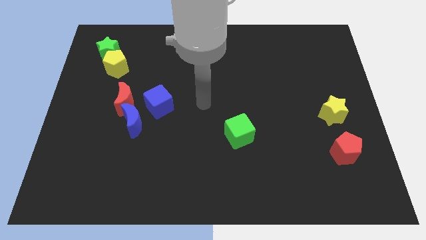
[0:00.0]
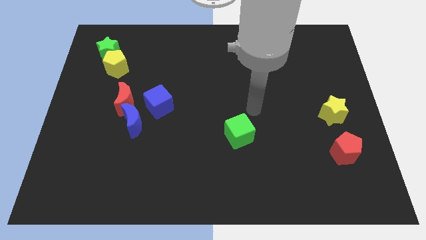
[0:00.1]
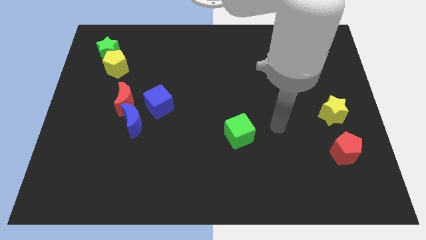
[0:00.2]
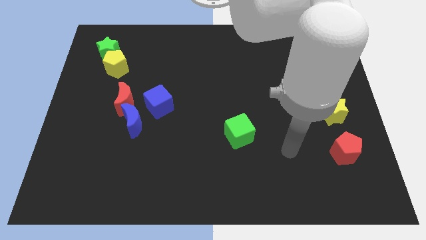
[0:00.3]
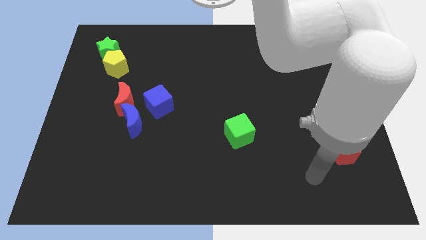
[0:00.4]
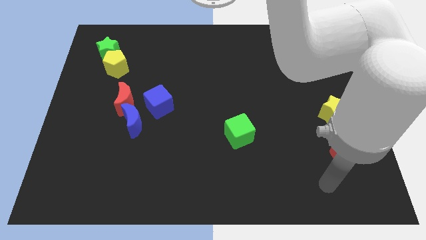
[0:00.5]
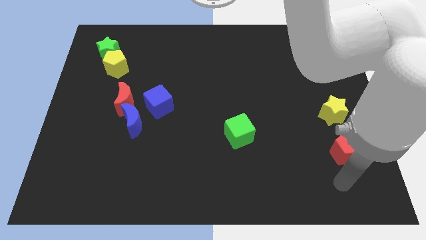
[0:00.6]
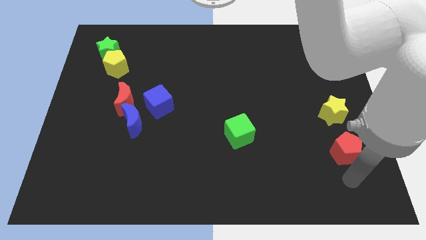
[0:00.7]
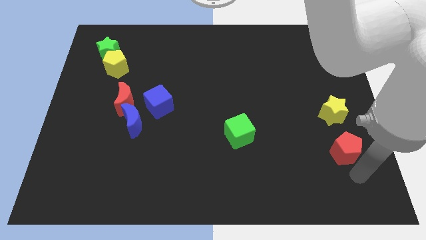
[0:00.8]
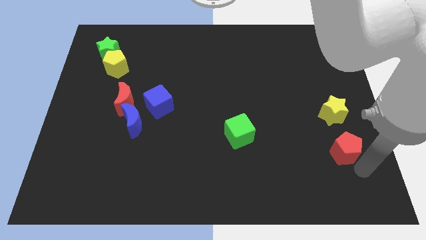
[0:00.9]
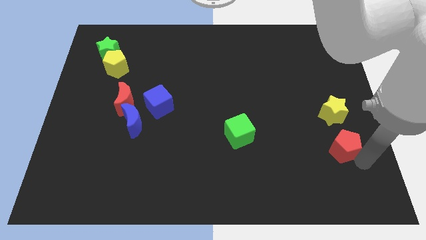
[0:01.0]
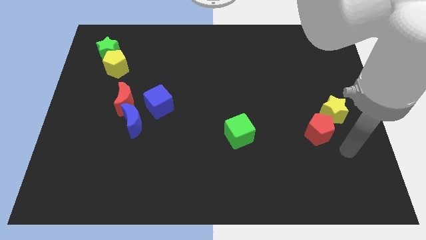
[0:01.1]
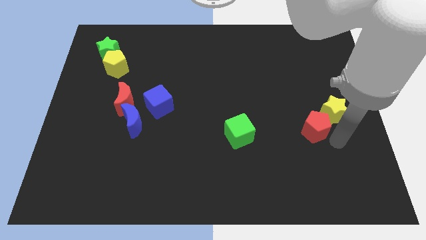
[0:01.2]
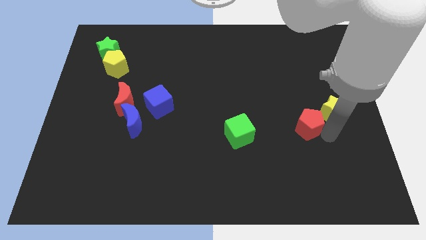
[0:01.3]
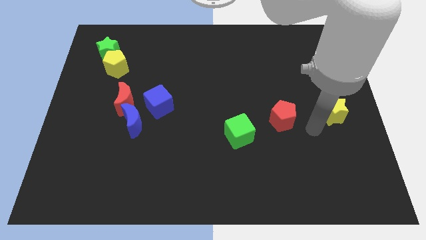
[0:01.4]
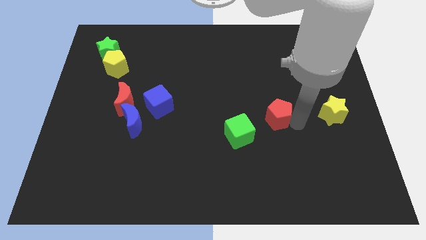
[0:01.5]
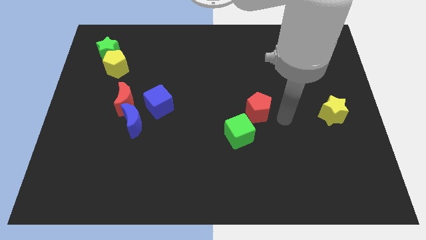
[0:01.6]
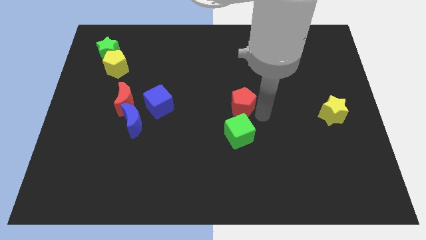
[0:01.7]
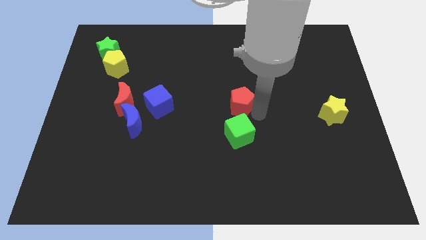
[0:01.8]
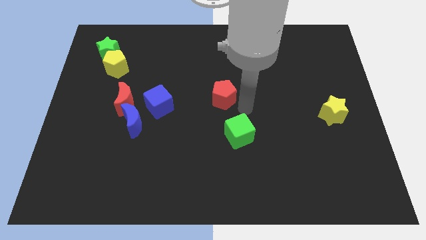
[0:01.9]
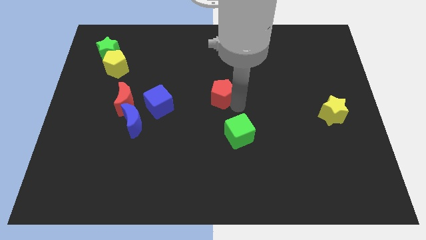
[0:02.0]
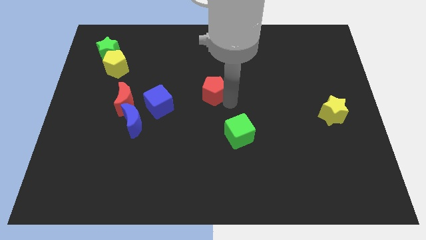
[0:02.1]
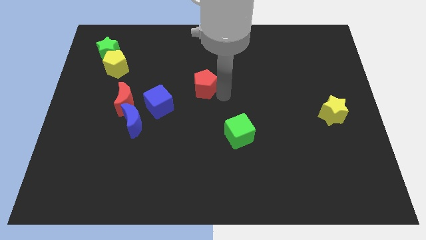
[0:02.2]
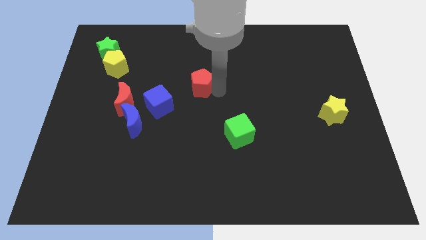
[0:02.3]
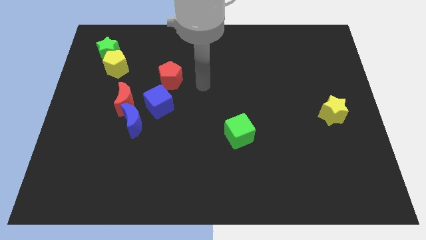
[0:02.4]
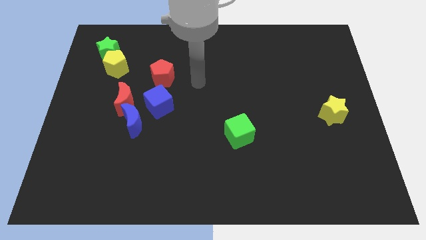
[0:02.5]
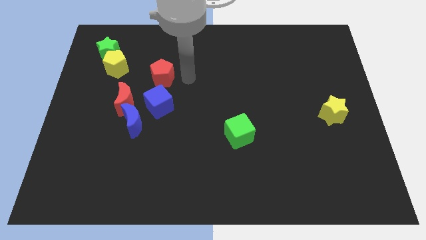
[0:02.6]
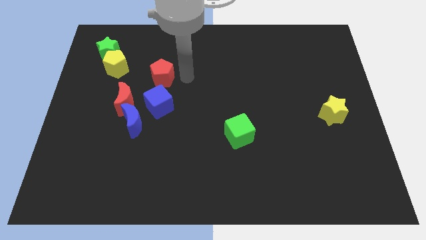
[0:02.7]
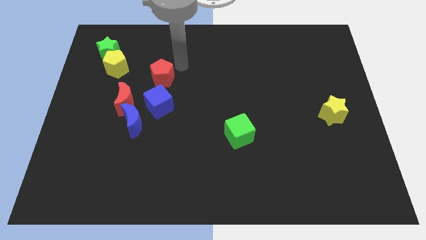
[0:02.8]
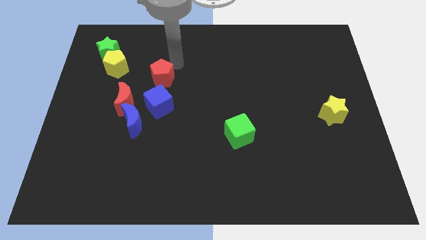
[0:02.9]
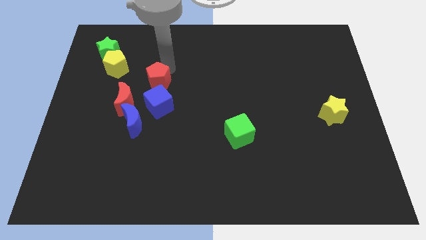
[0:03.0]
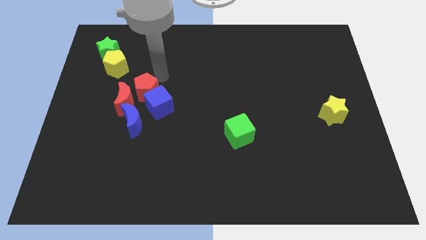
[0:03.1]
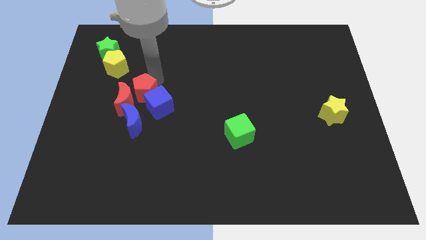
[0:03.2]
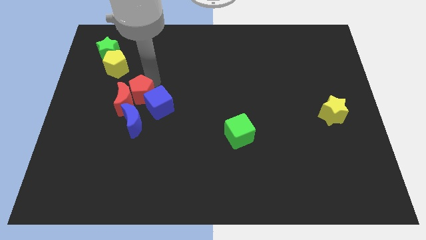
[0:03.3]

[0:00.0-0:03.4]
put the red pentagon towards the red moon

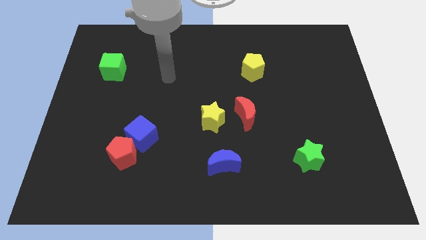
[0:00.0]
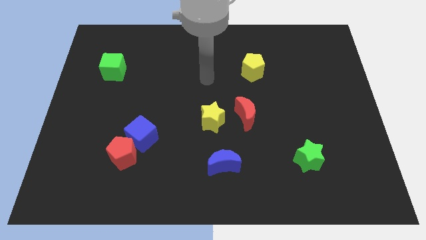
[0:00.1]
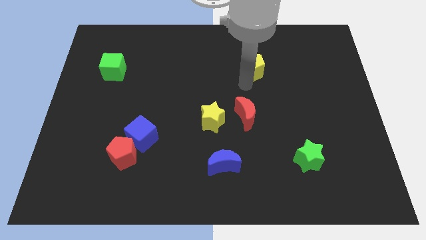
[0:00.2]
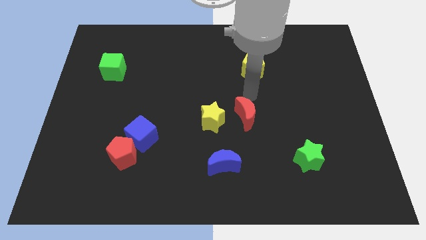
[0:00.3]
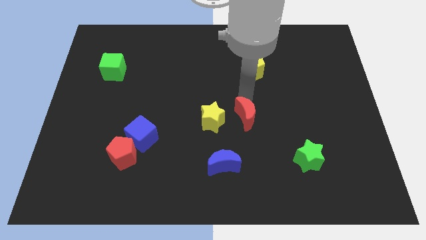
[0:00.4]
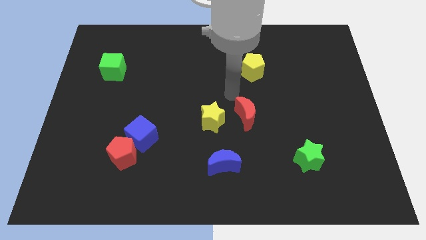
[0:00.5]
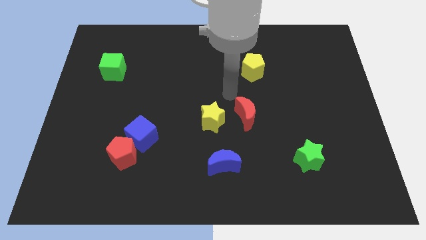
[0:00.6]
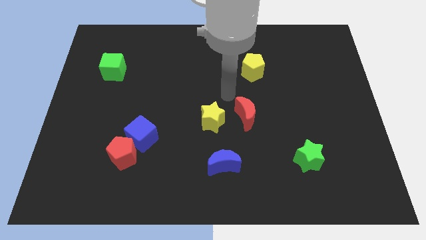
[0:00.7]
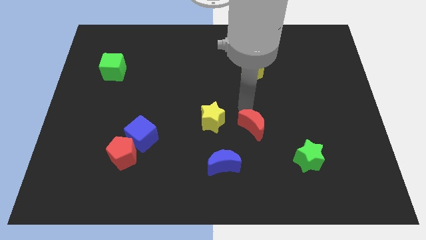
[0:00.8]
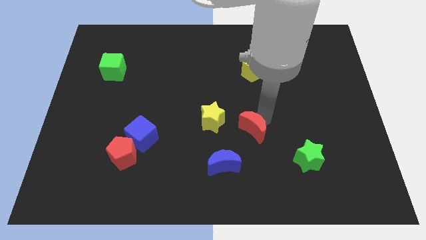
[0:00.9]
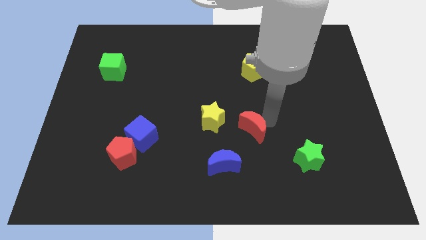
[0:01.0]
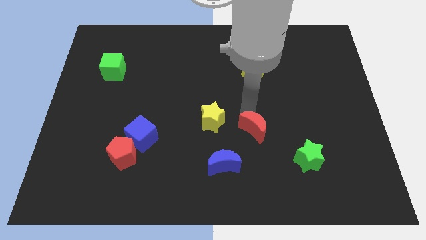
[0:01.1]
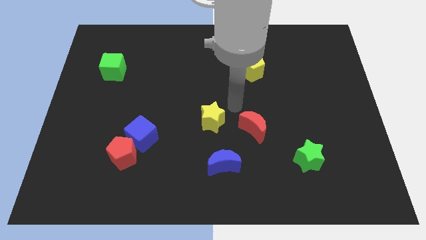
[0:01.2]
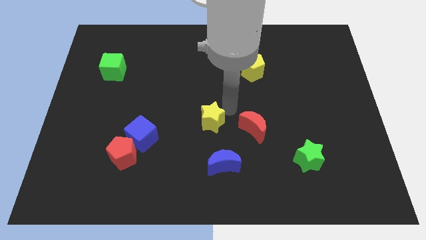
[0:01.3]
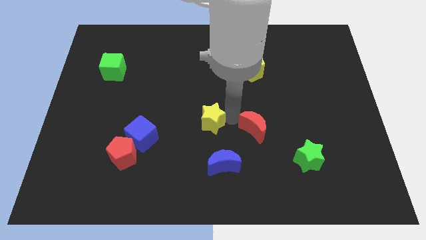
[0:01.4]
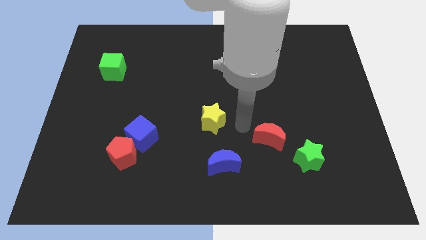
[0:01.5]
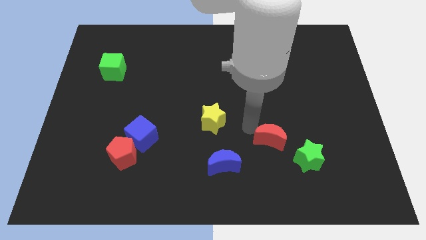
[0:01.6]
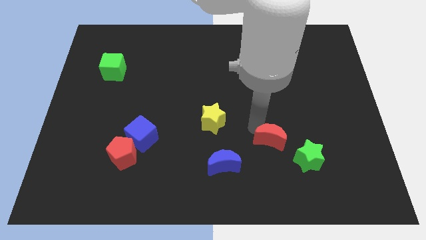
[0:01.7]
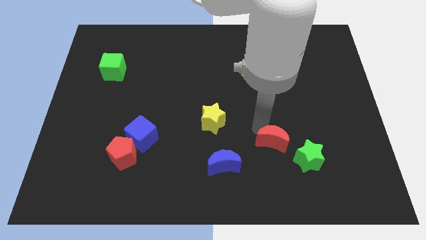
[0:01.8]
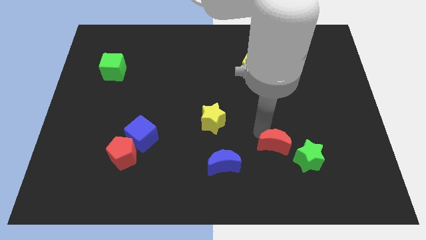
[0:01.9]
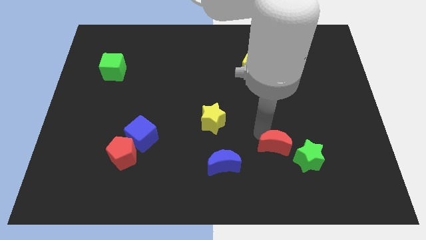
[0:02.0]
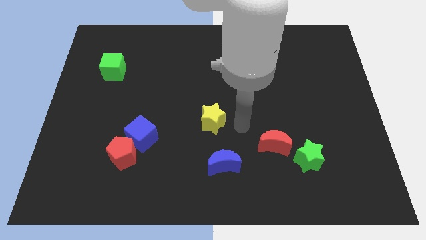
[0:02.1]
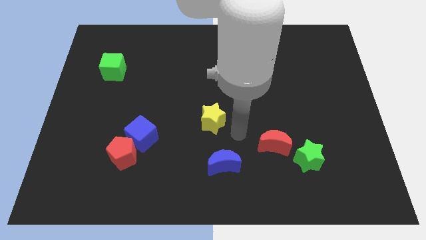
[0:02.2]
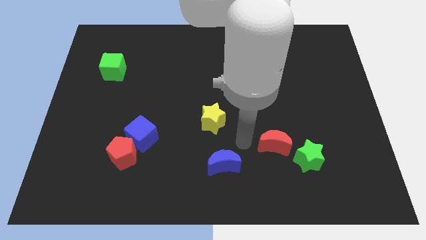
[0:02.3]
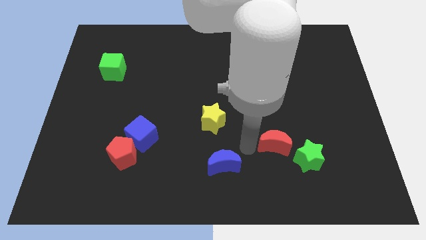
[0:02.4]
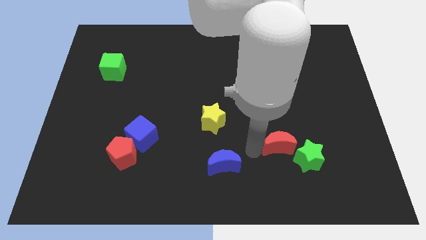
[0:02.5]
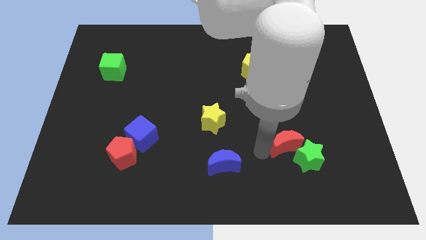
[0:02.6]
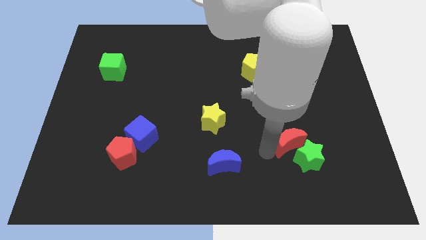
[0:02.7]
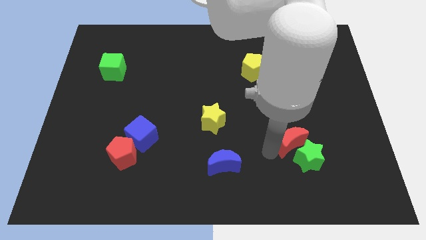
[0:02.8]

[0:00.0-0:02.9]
push the red moon close to the green star

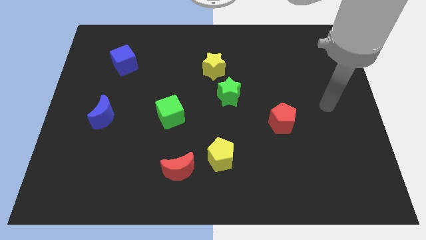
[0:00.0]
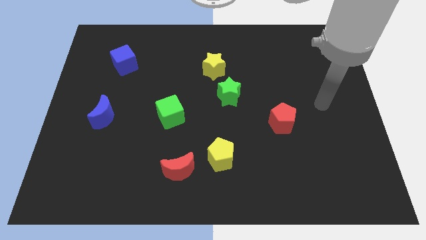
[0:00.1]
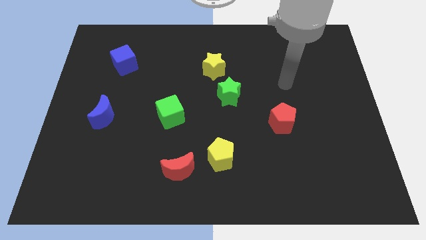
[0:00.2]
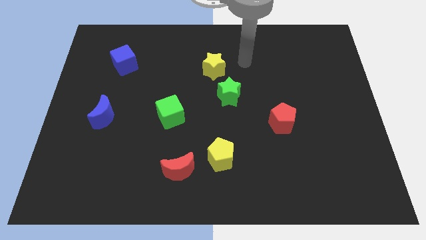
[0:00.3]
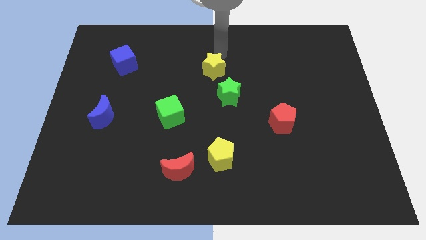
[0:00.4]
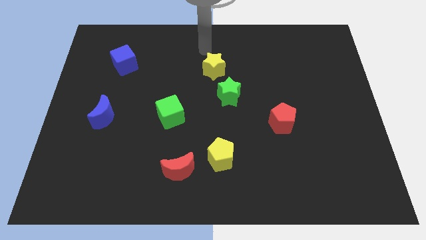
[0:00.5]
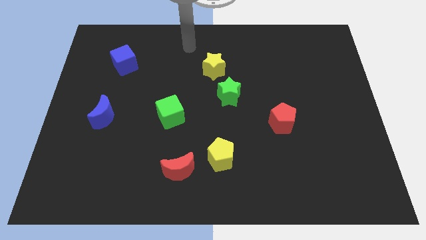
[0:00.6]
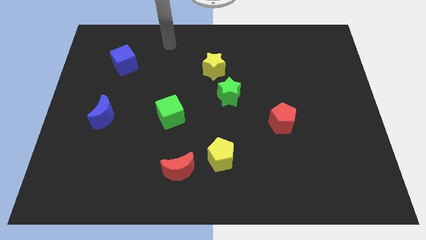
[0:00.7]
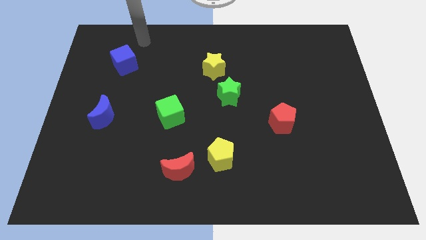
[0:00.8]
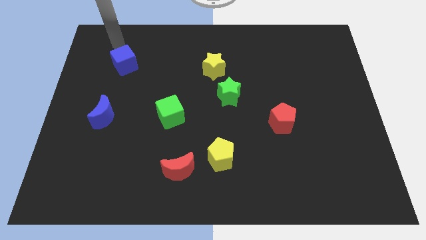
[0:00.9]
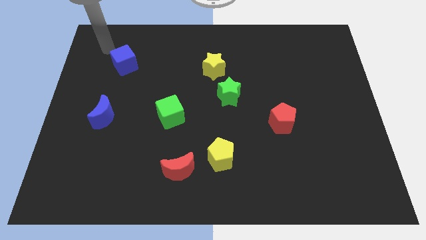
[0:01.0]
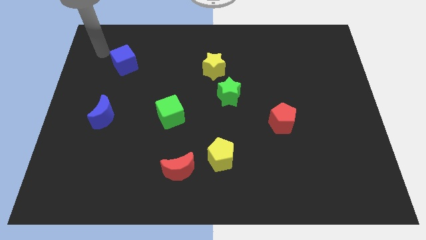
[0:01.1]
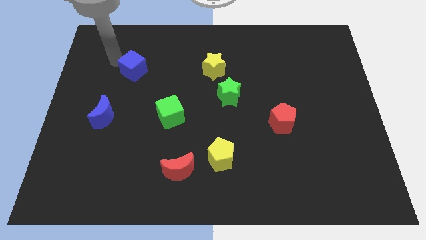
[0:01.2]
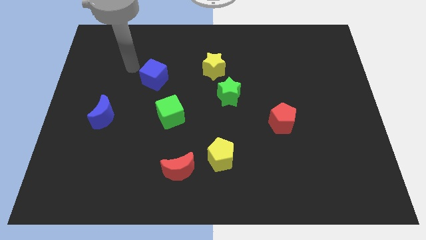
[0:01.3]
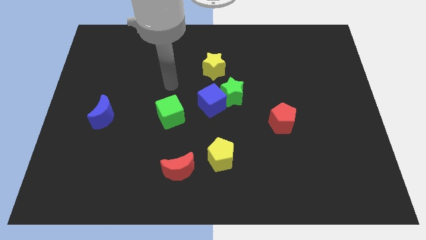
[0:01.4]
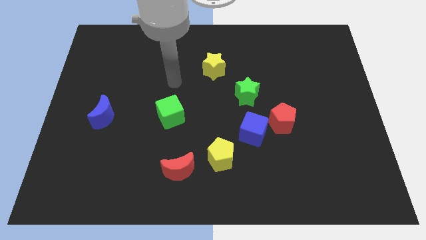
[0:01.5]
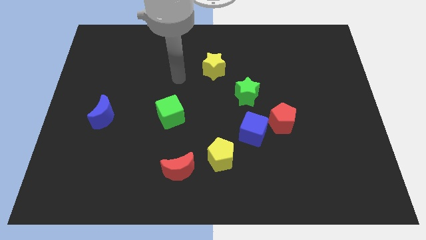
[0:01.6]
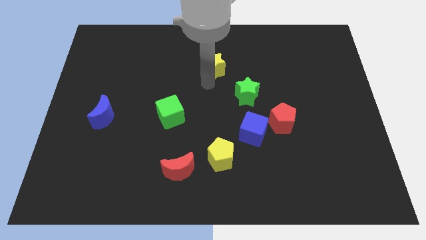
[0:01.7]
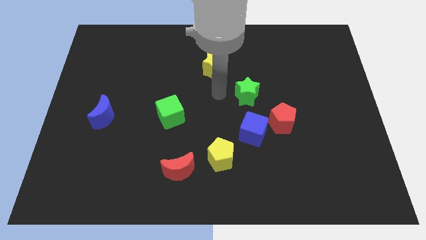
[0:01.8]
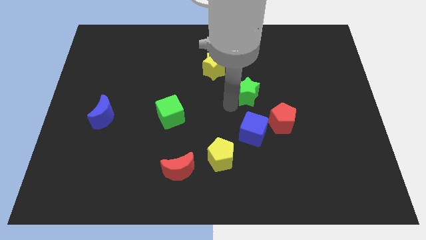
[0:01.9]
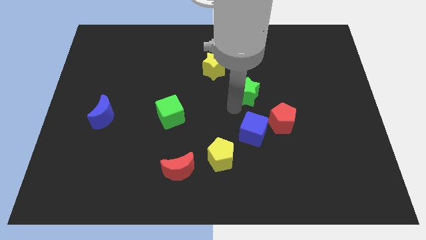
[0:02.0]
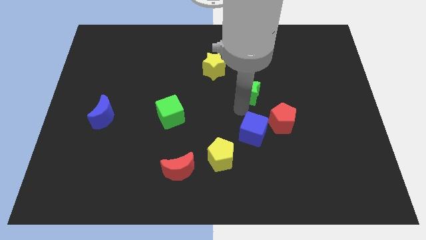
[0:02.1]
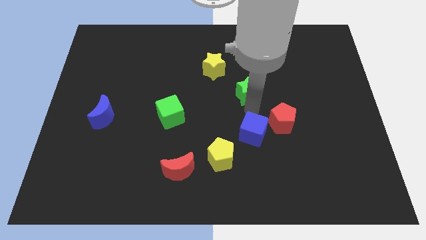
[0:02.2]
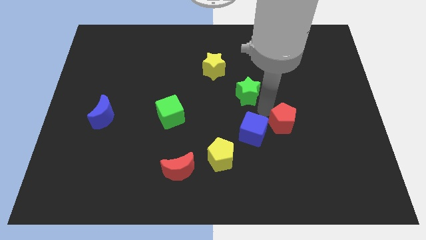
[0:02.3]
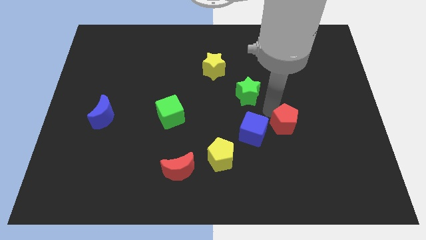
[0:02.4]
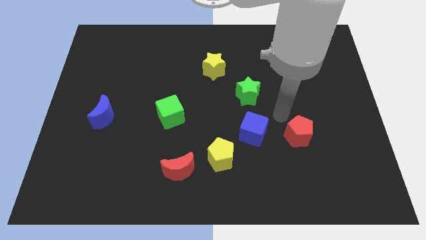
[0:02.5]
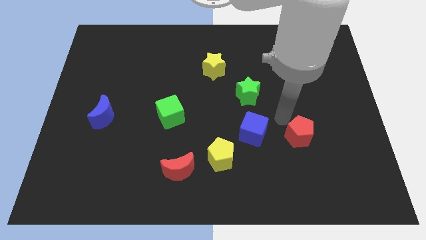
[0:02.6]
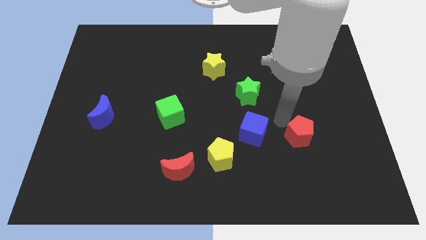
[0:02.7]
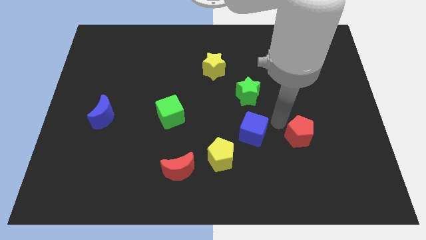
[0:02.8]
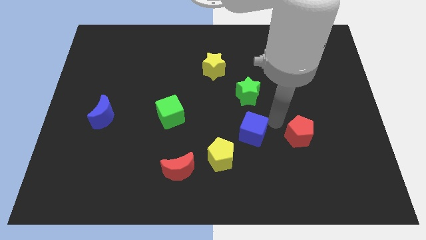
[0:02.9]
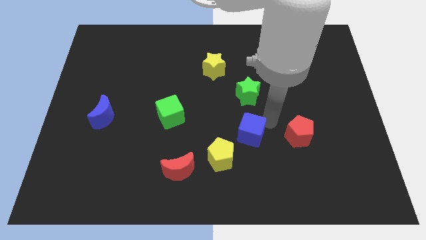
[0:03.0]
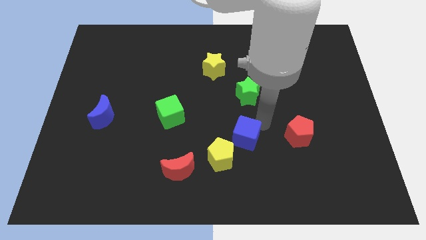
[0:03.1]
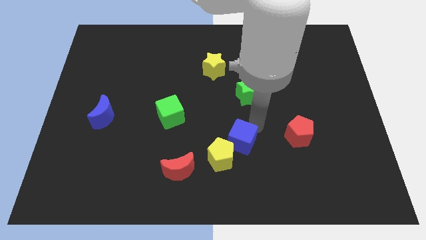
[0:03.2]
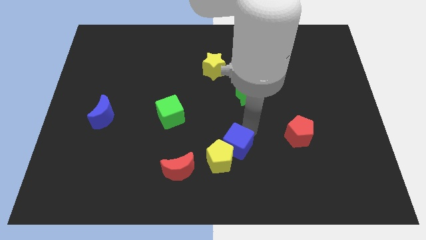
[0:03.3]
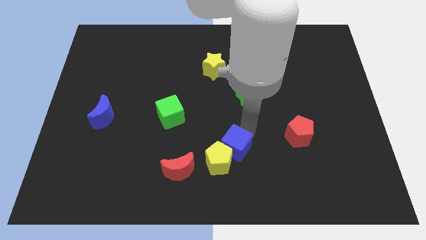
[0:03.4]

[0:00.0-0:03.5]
move the blue cube close to the yellow pentagon
